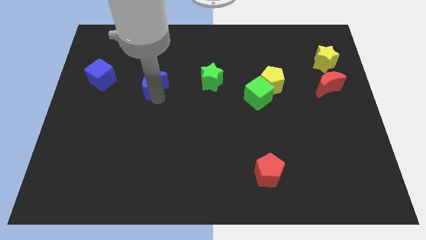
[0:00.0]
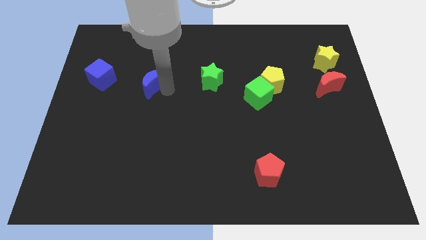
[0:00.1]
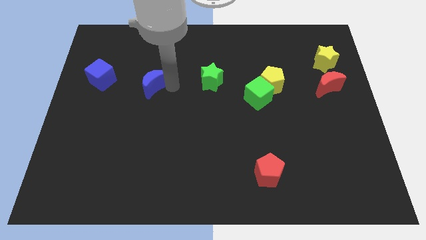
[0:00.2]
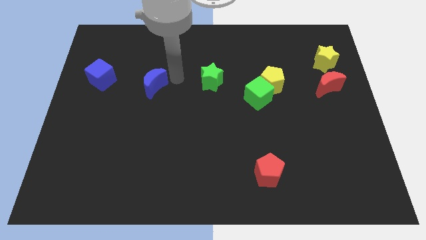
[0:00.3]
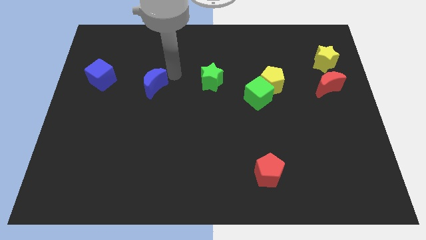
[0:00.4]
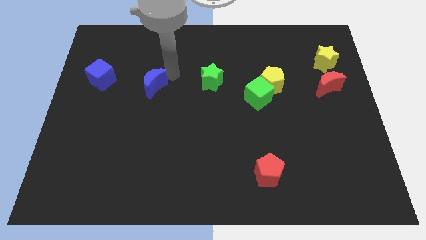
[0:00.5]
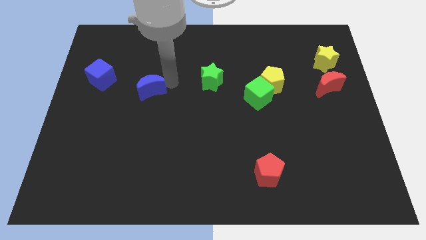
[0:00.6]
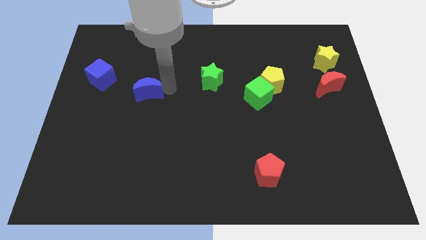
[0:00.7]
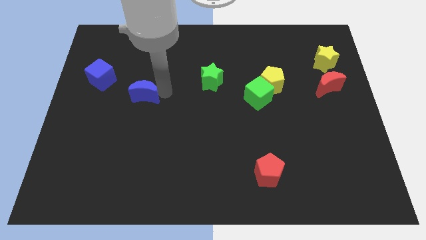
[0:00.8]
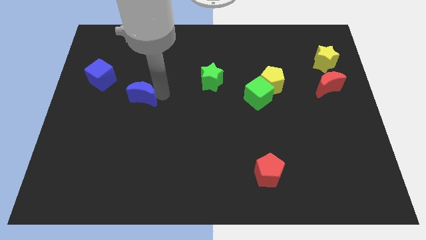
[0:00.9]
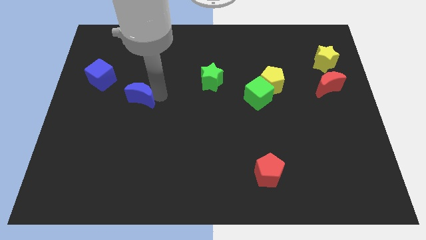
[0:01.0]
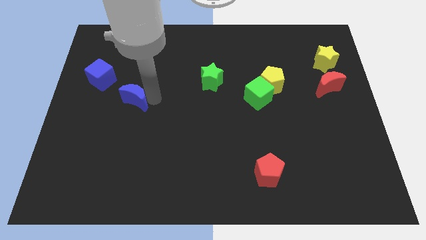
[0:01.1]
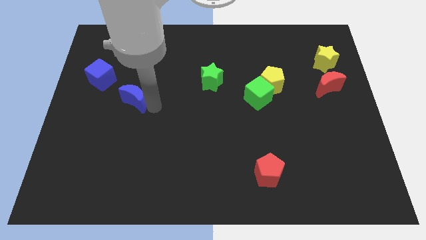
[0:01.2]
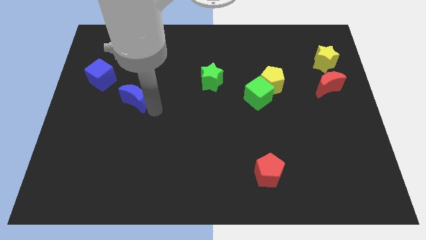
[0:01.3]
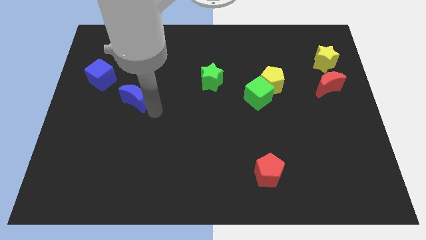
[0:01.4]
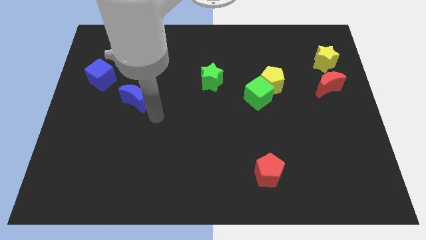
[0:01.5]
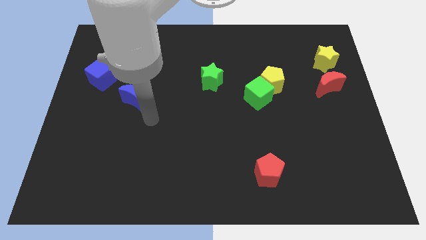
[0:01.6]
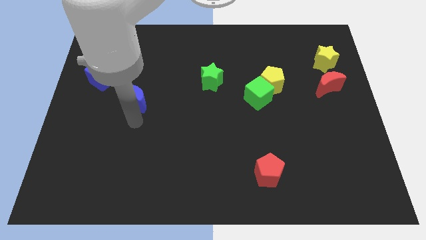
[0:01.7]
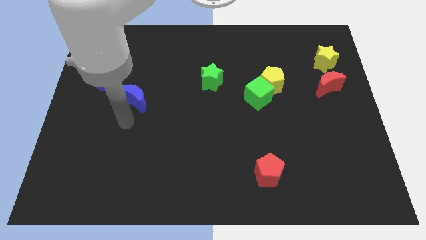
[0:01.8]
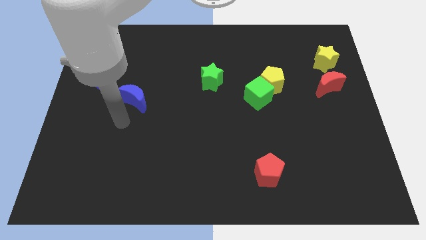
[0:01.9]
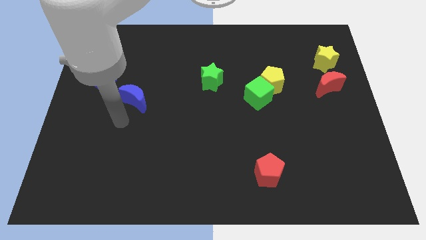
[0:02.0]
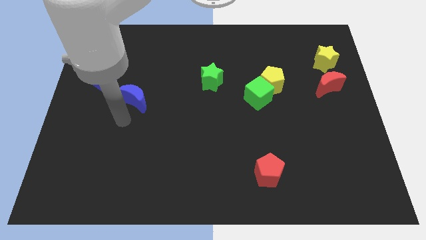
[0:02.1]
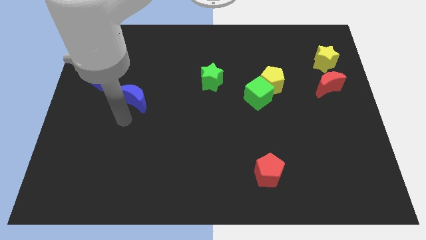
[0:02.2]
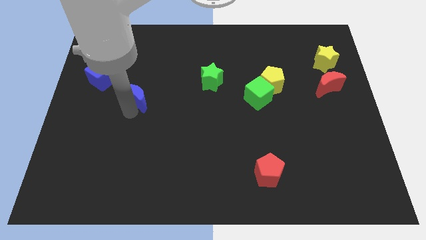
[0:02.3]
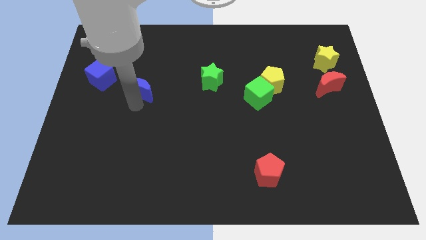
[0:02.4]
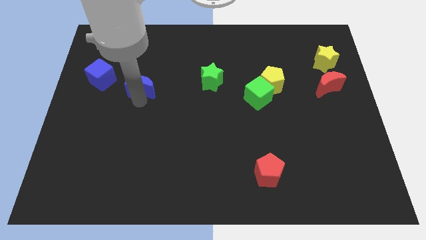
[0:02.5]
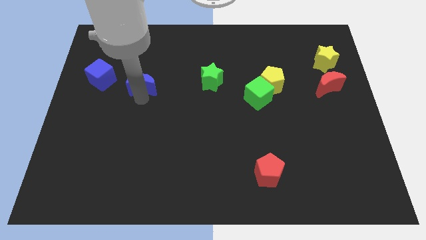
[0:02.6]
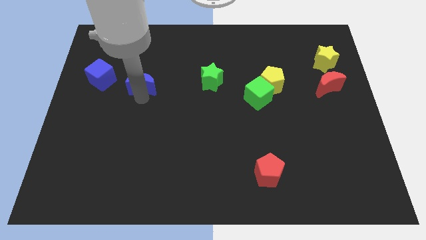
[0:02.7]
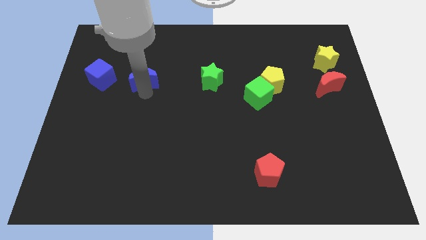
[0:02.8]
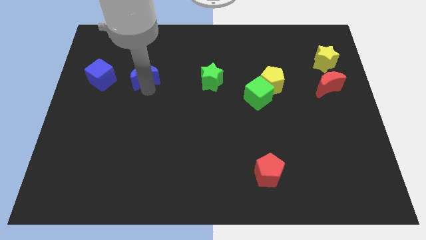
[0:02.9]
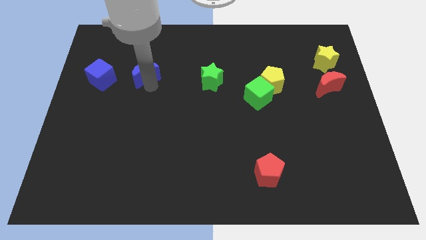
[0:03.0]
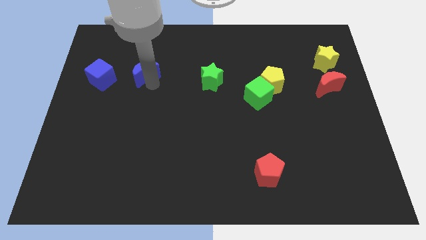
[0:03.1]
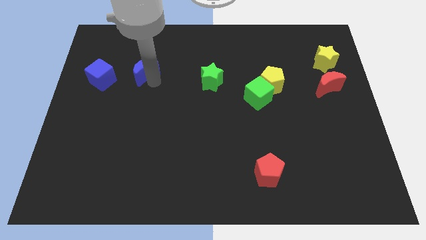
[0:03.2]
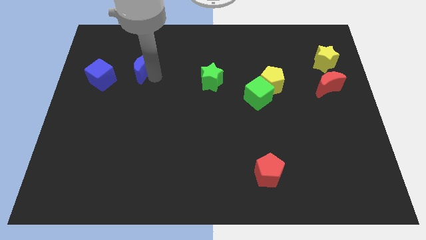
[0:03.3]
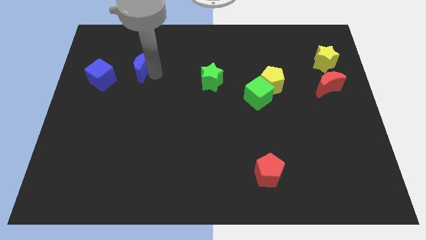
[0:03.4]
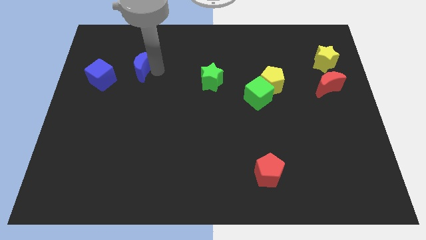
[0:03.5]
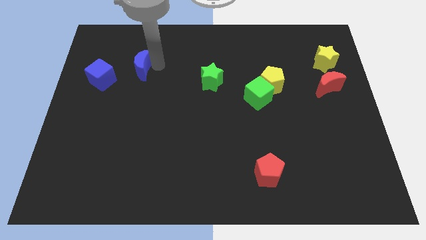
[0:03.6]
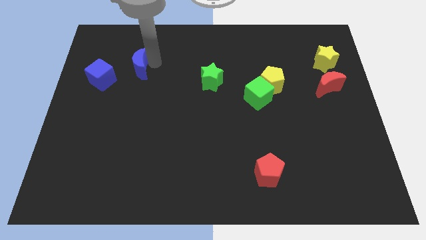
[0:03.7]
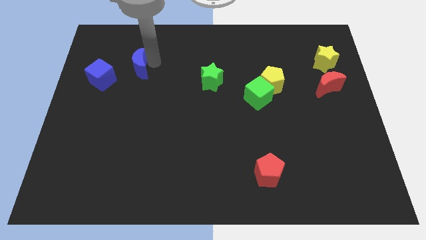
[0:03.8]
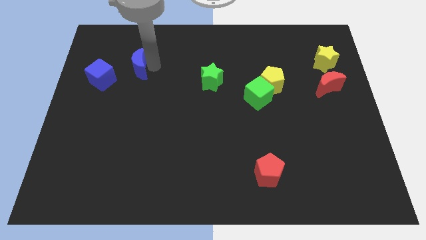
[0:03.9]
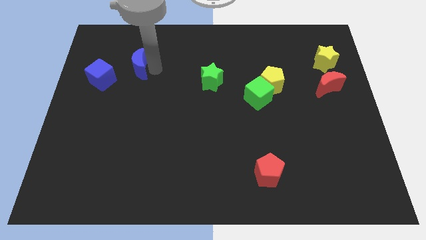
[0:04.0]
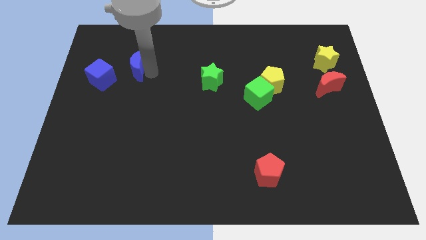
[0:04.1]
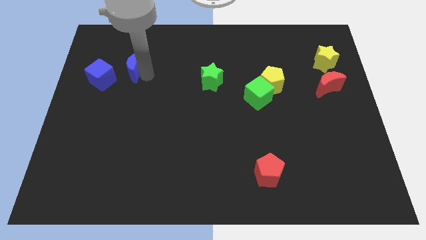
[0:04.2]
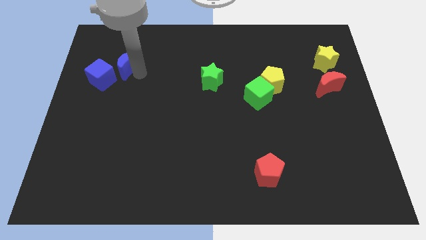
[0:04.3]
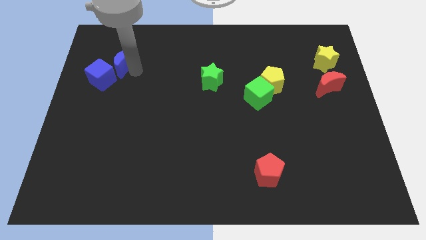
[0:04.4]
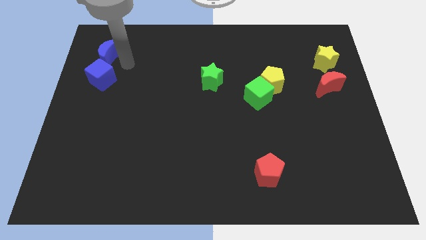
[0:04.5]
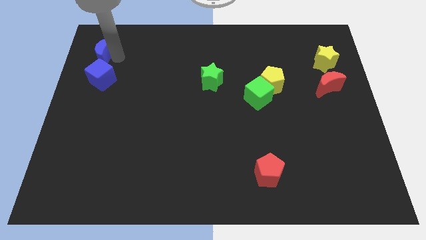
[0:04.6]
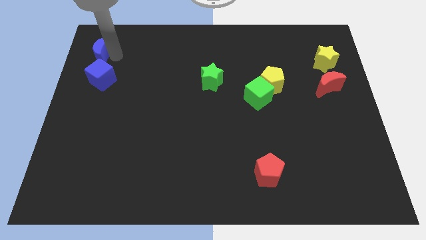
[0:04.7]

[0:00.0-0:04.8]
push the blue crescent to the top of the blue cube

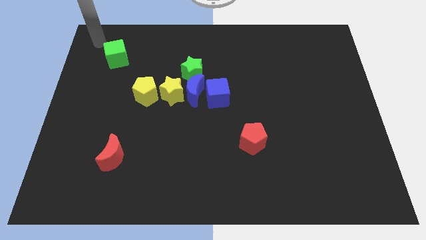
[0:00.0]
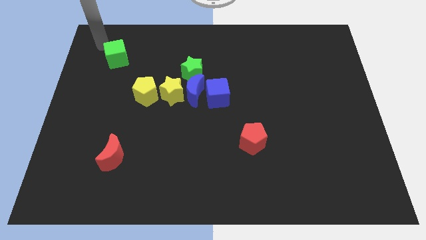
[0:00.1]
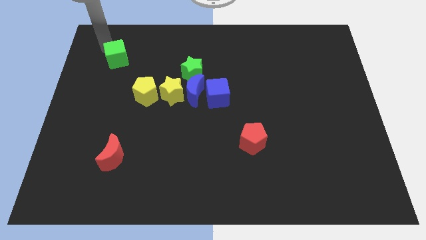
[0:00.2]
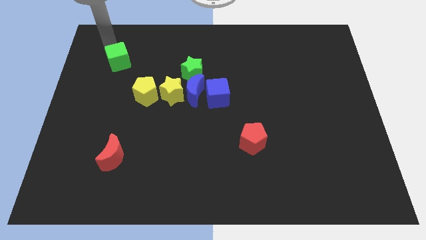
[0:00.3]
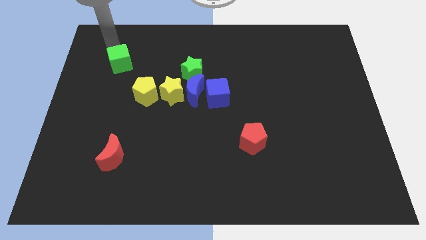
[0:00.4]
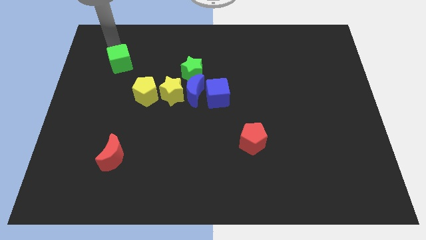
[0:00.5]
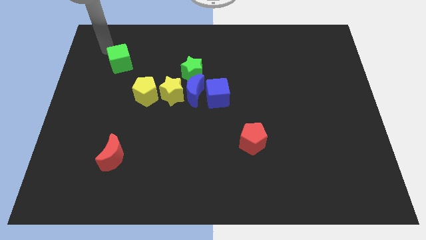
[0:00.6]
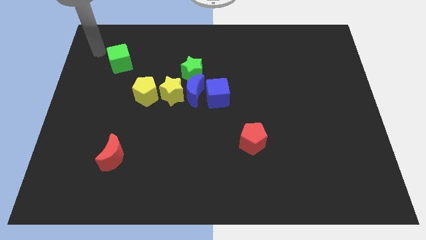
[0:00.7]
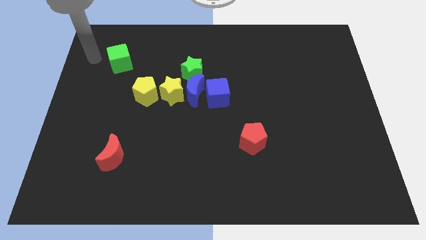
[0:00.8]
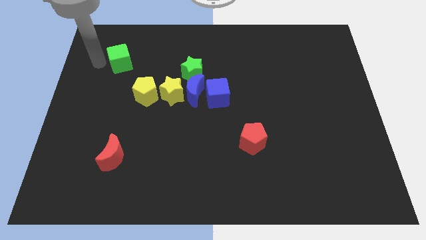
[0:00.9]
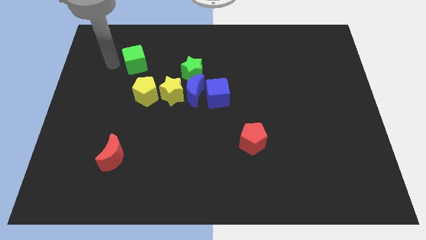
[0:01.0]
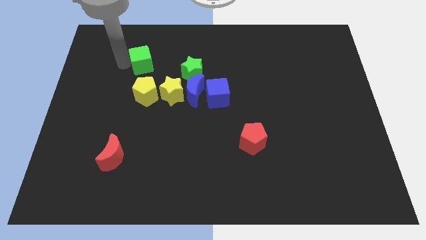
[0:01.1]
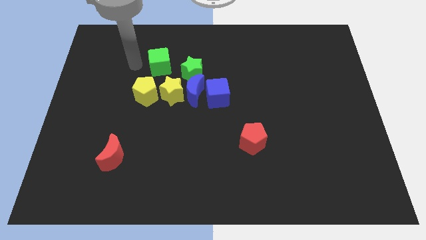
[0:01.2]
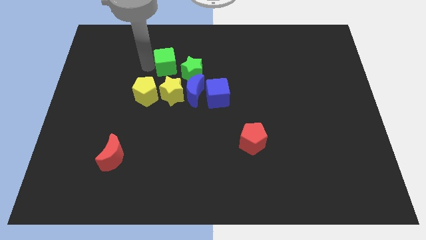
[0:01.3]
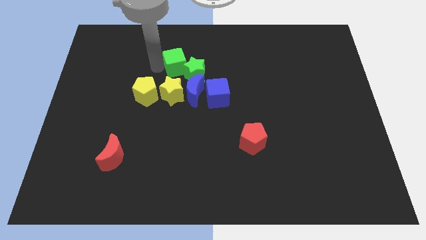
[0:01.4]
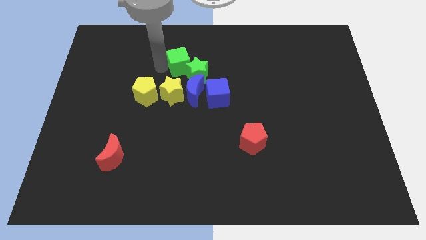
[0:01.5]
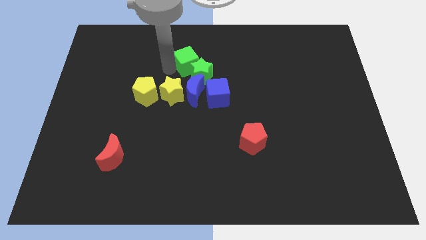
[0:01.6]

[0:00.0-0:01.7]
push the green cube into the green star

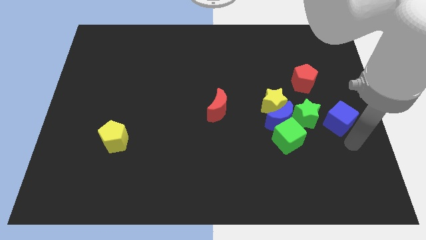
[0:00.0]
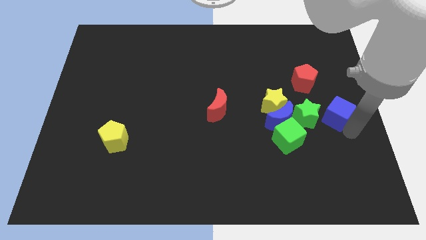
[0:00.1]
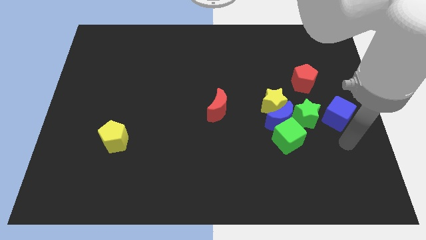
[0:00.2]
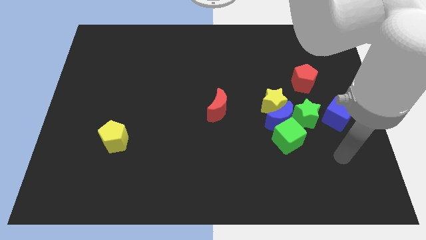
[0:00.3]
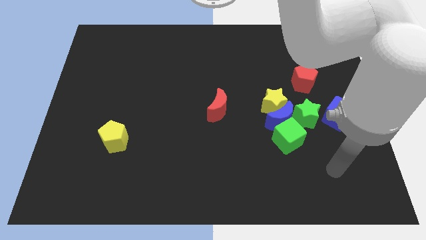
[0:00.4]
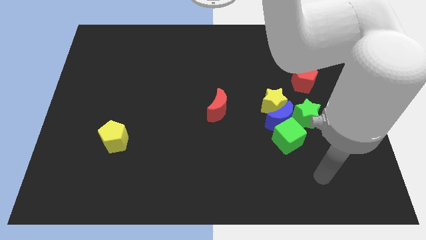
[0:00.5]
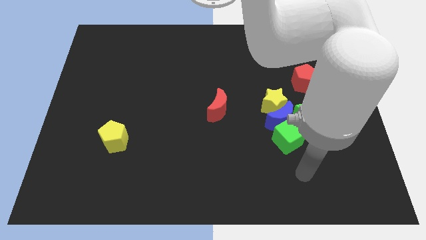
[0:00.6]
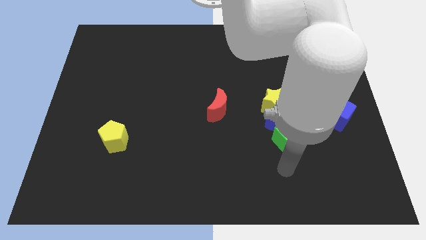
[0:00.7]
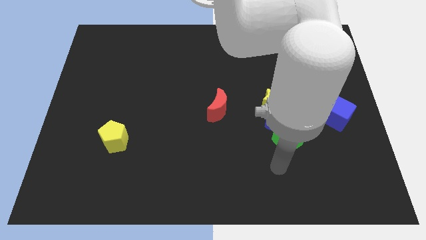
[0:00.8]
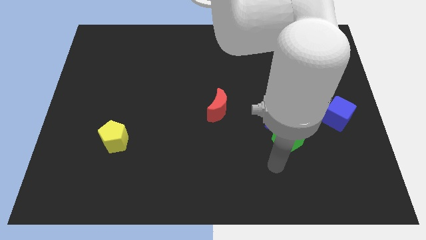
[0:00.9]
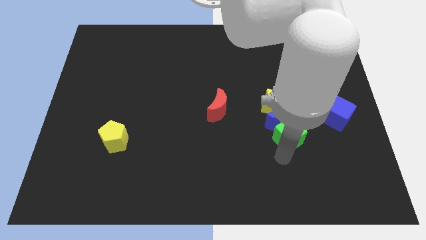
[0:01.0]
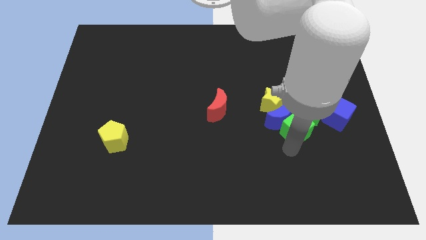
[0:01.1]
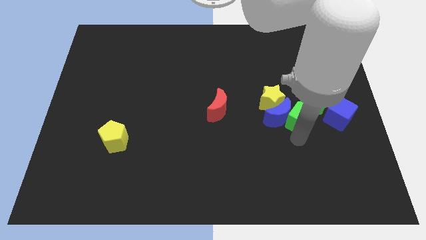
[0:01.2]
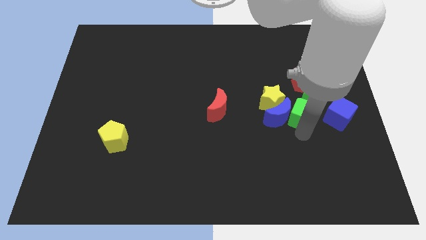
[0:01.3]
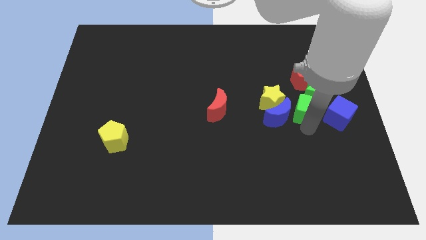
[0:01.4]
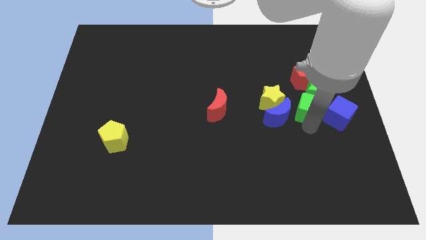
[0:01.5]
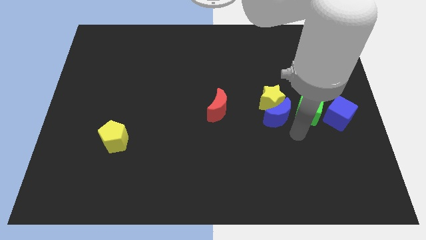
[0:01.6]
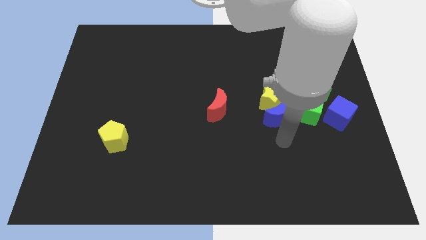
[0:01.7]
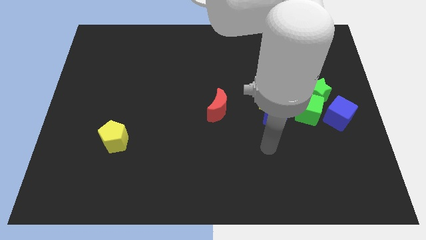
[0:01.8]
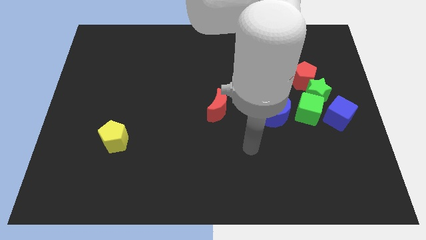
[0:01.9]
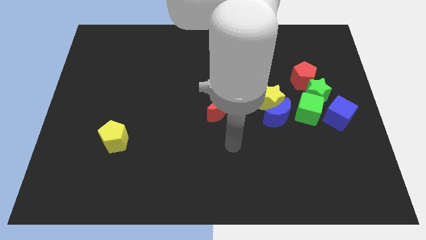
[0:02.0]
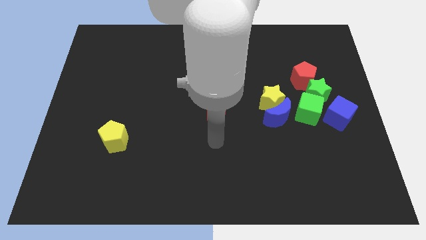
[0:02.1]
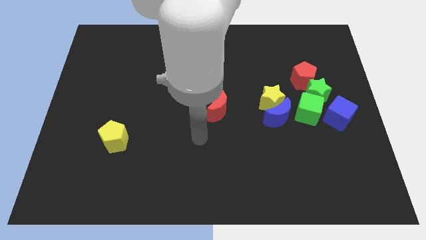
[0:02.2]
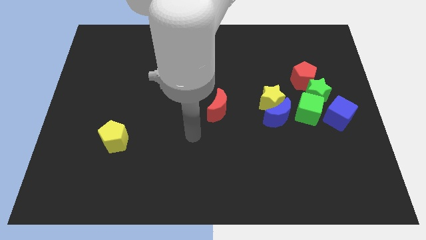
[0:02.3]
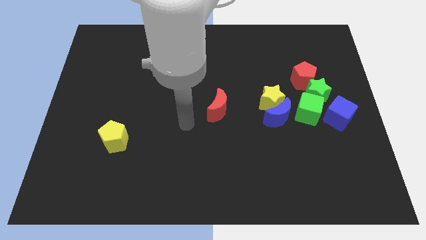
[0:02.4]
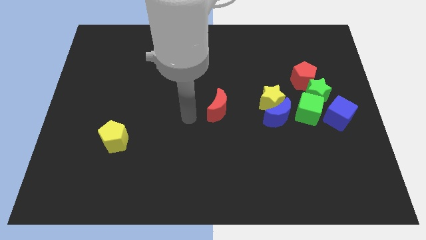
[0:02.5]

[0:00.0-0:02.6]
push green blocks and blue moon towards red pentagon

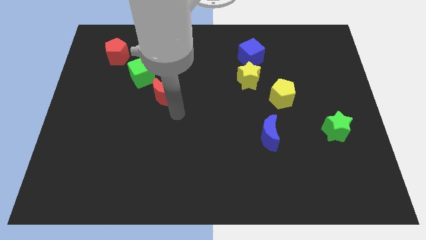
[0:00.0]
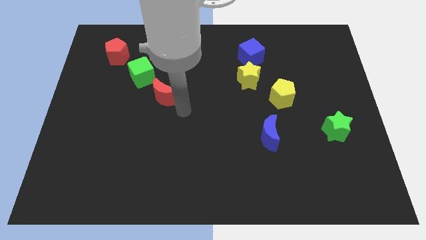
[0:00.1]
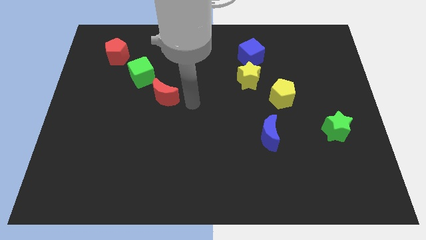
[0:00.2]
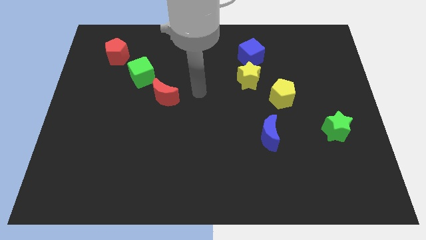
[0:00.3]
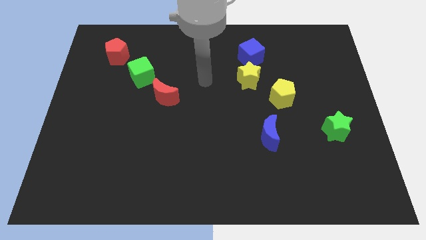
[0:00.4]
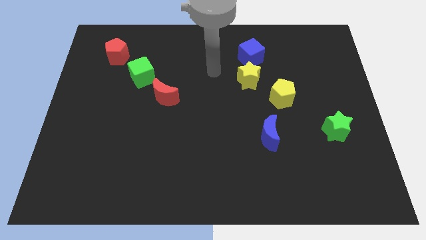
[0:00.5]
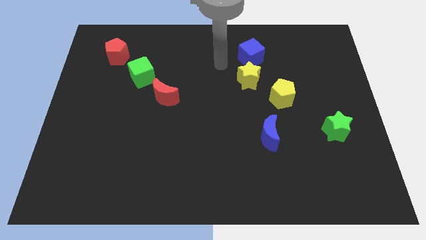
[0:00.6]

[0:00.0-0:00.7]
move the arm away from the red moon
